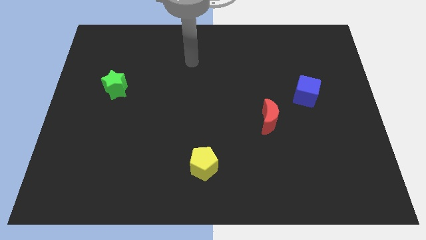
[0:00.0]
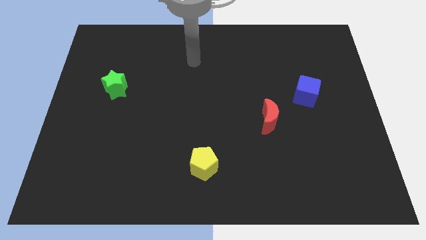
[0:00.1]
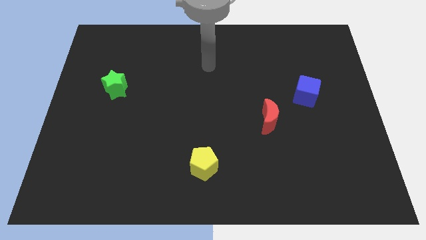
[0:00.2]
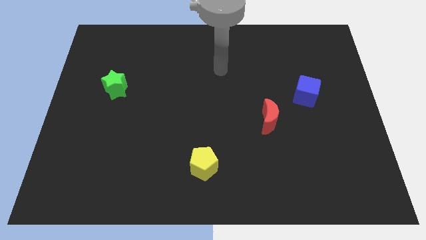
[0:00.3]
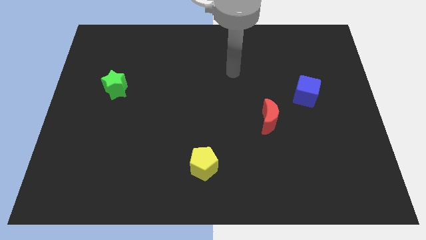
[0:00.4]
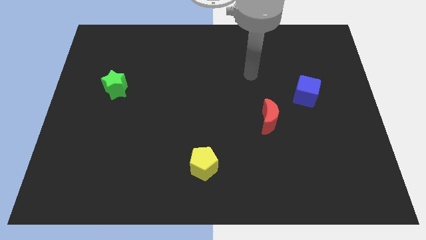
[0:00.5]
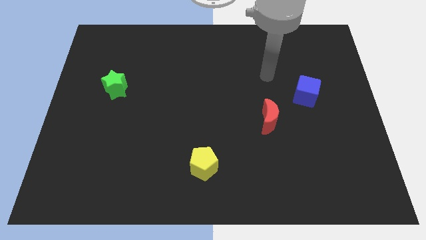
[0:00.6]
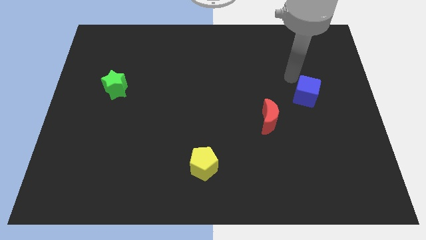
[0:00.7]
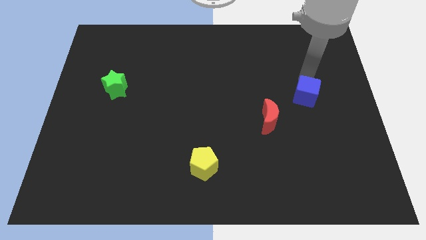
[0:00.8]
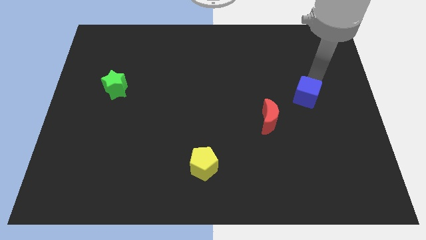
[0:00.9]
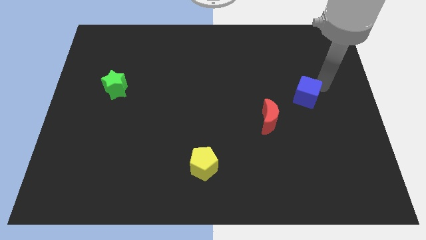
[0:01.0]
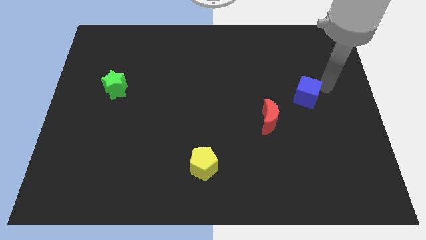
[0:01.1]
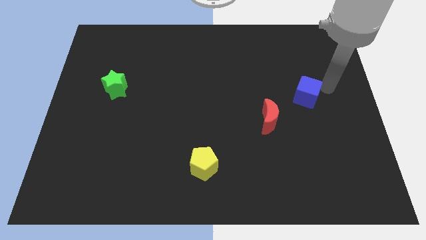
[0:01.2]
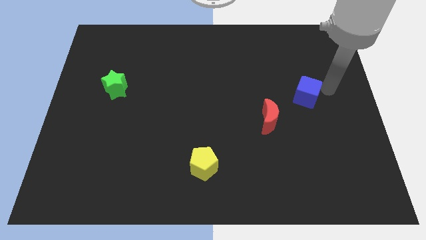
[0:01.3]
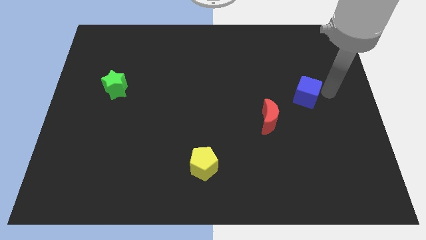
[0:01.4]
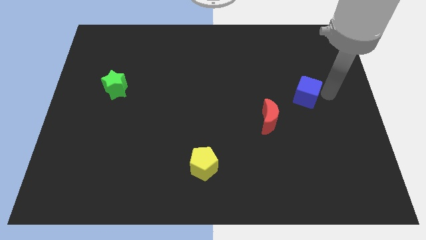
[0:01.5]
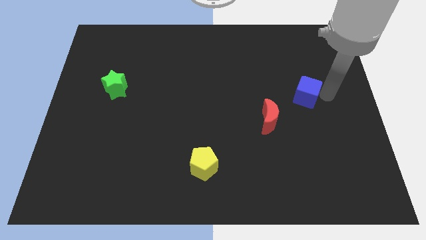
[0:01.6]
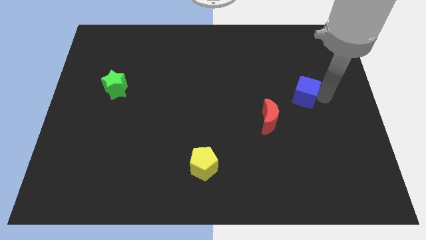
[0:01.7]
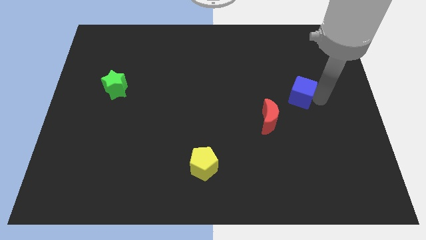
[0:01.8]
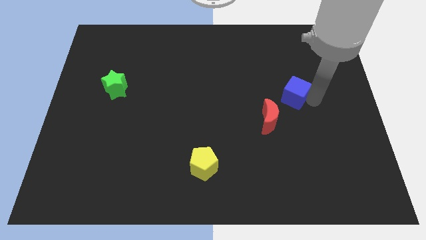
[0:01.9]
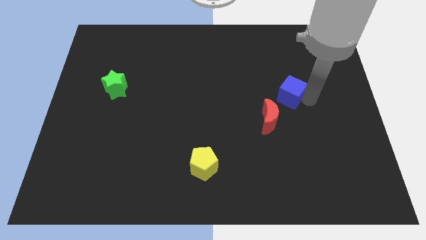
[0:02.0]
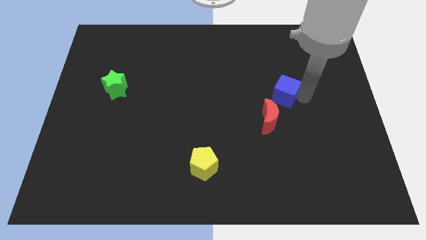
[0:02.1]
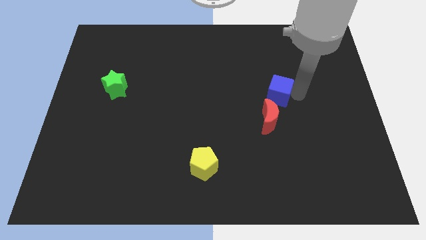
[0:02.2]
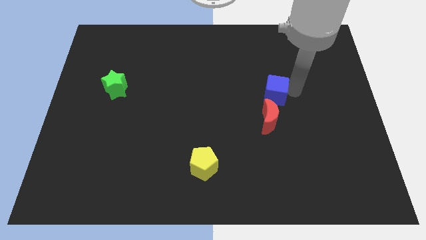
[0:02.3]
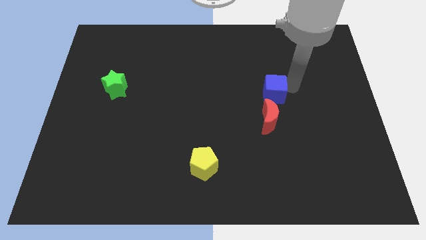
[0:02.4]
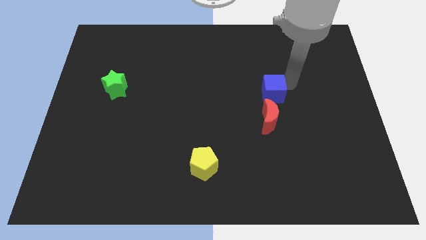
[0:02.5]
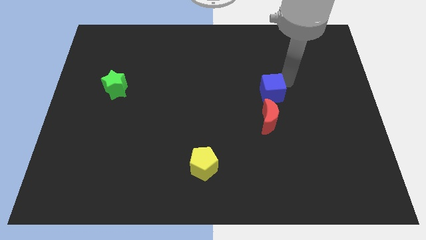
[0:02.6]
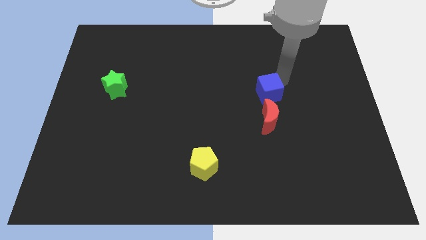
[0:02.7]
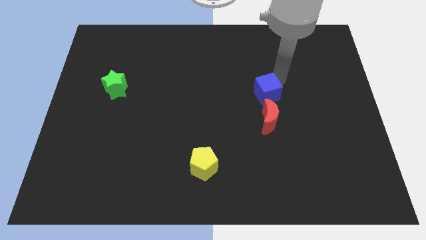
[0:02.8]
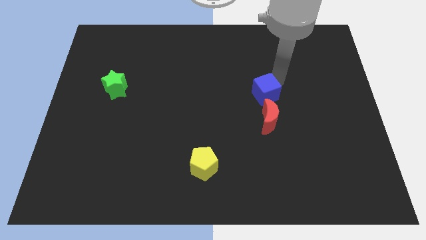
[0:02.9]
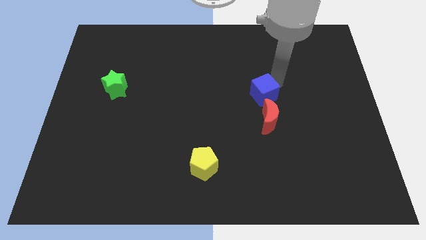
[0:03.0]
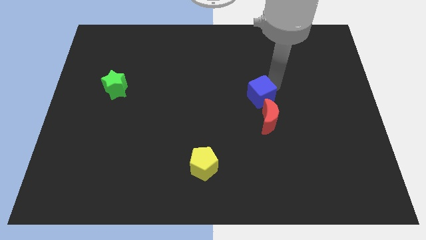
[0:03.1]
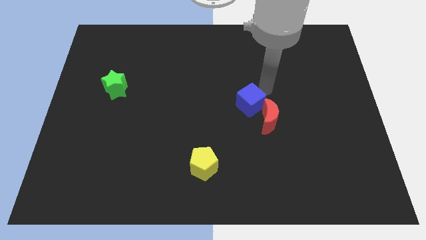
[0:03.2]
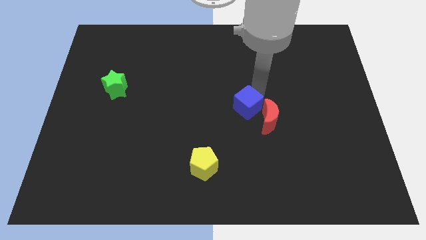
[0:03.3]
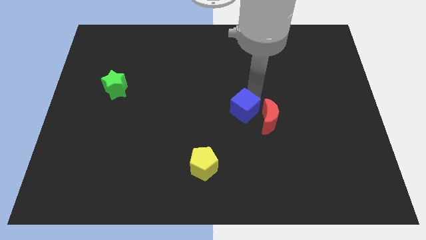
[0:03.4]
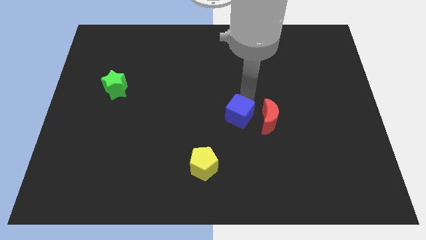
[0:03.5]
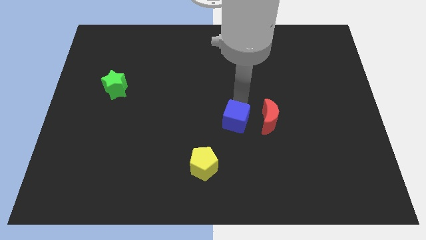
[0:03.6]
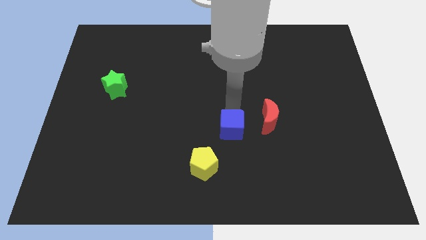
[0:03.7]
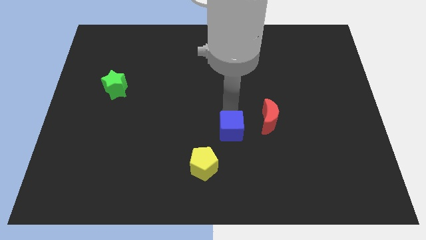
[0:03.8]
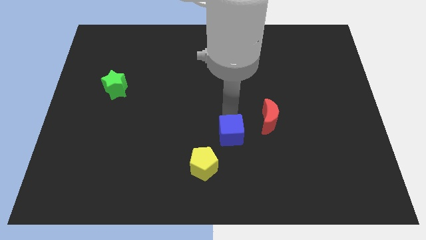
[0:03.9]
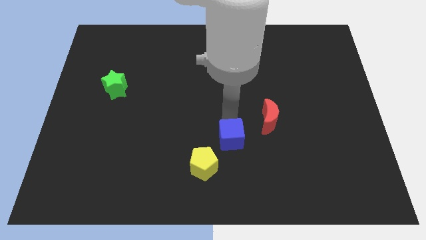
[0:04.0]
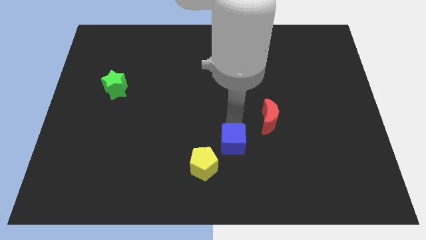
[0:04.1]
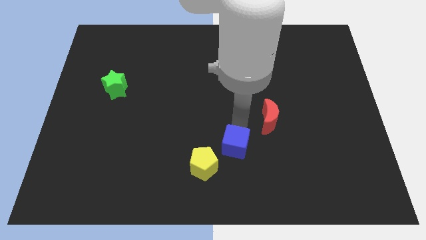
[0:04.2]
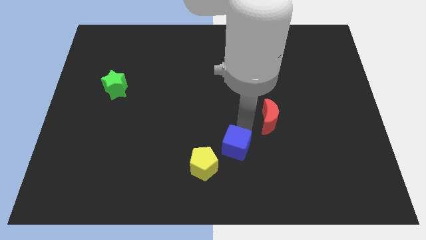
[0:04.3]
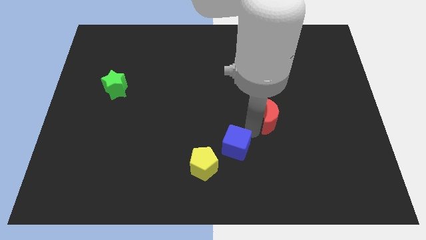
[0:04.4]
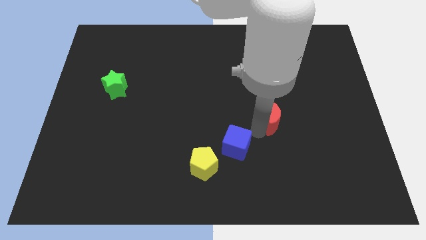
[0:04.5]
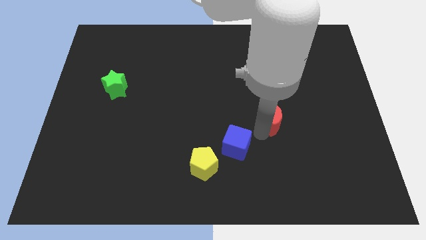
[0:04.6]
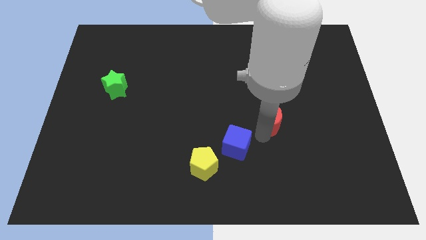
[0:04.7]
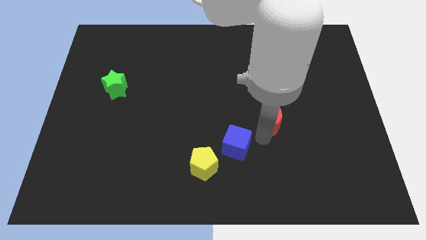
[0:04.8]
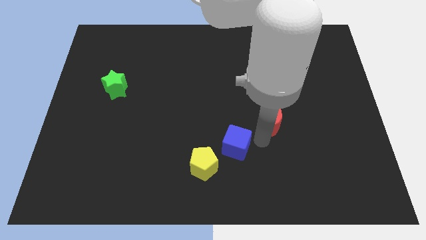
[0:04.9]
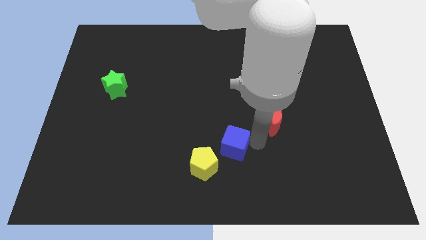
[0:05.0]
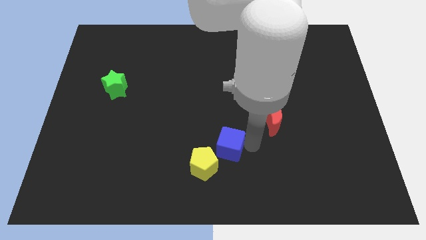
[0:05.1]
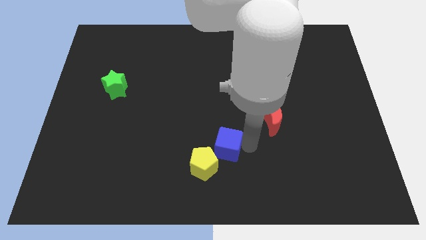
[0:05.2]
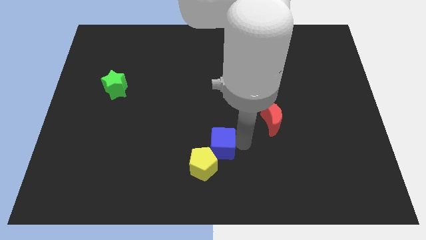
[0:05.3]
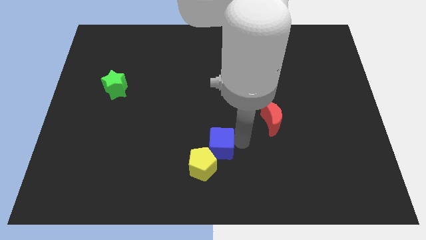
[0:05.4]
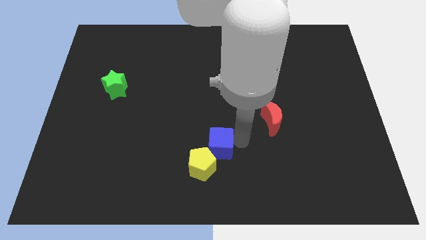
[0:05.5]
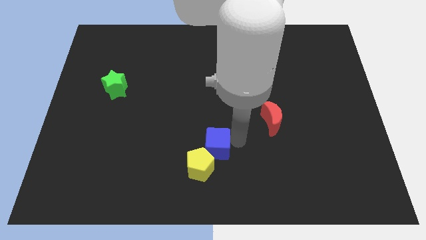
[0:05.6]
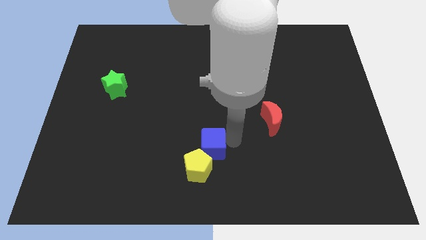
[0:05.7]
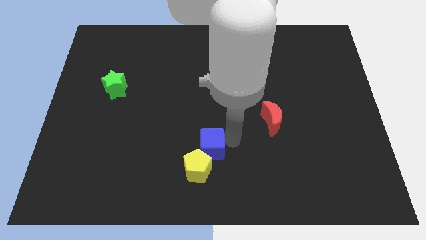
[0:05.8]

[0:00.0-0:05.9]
push the blue cube close to the pentagon

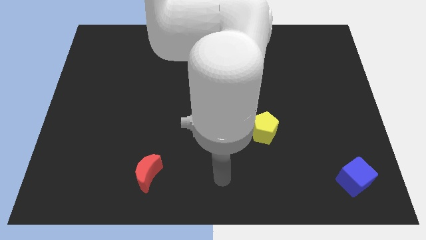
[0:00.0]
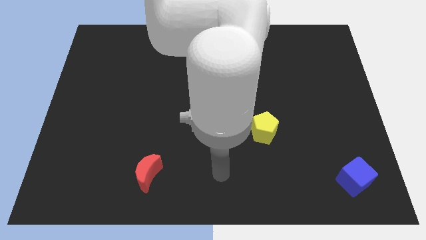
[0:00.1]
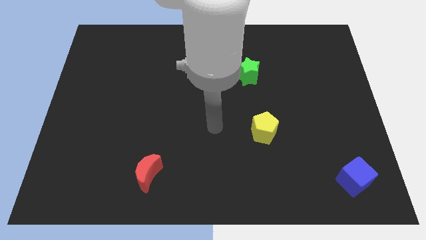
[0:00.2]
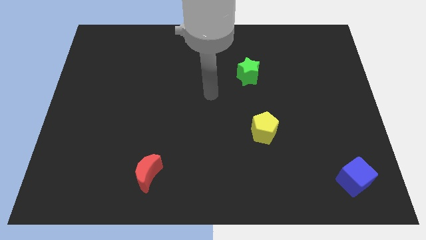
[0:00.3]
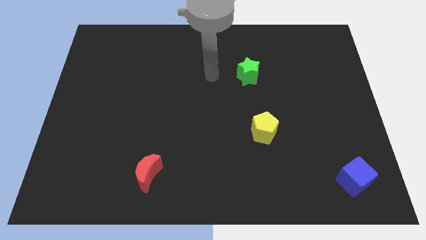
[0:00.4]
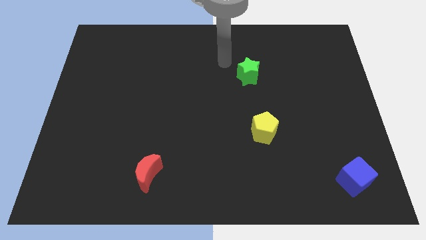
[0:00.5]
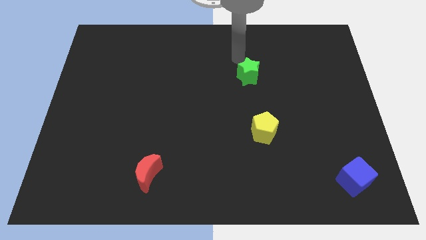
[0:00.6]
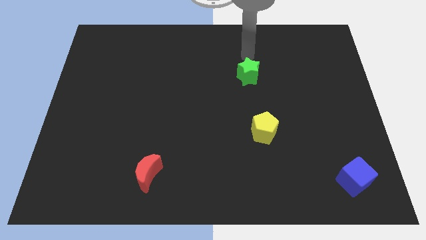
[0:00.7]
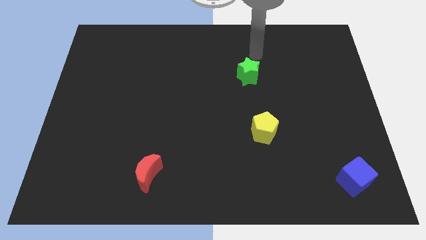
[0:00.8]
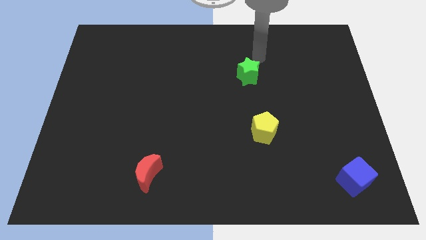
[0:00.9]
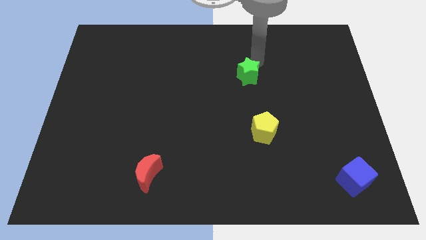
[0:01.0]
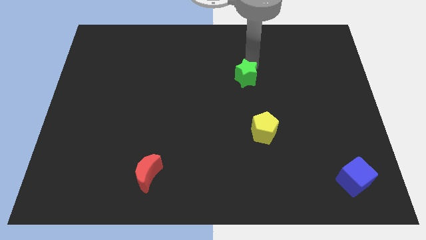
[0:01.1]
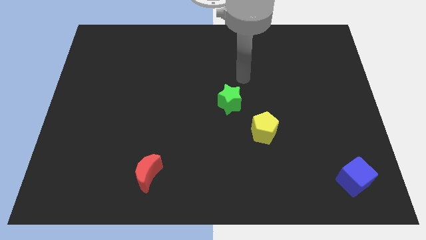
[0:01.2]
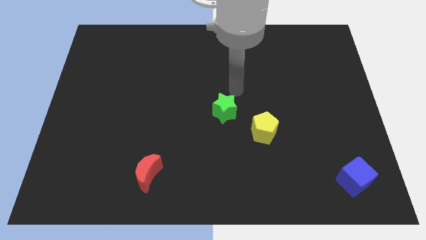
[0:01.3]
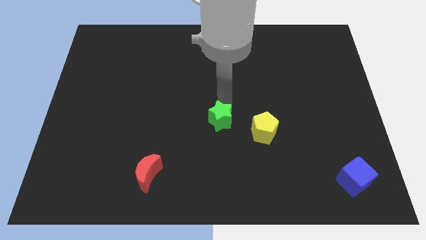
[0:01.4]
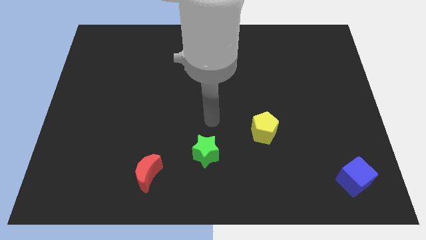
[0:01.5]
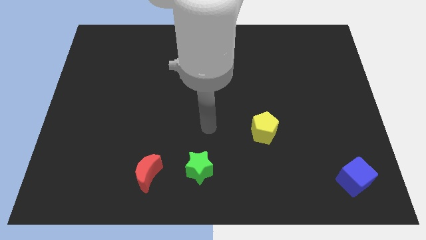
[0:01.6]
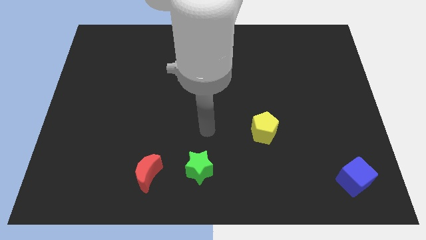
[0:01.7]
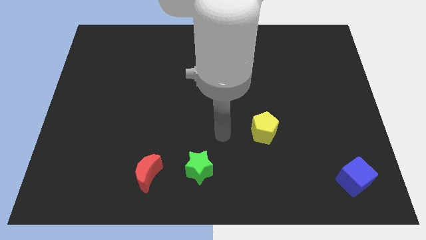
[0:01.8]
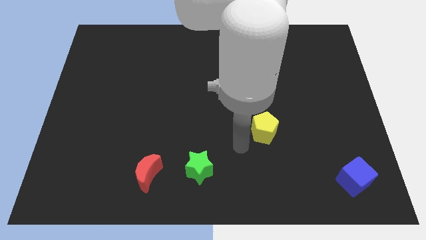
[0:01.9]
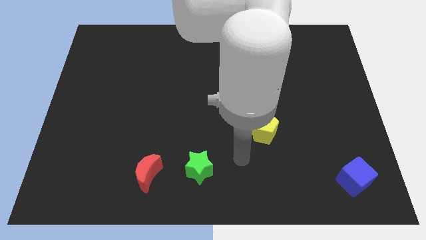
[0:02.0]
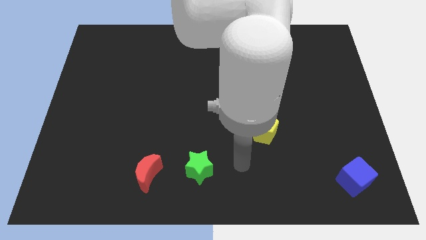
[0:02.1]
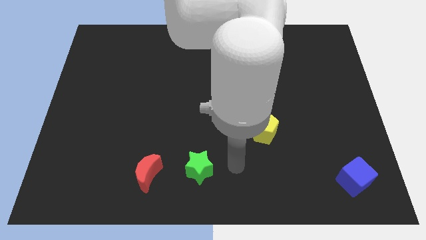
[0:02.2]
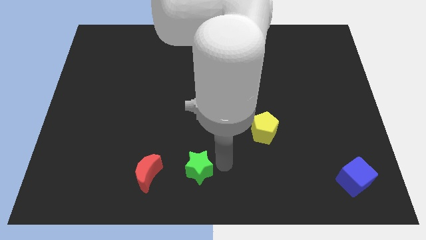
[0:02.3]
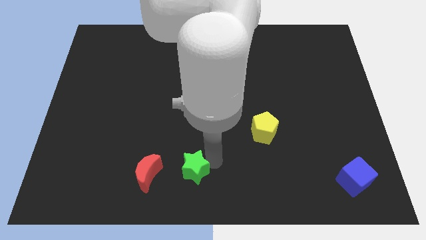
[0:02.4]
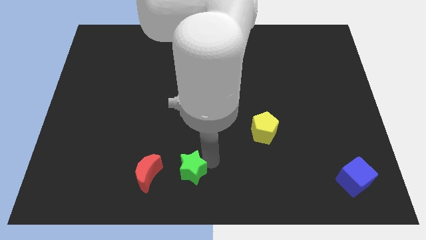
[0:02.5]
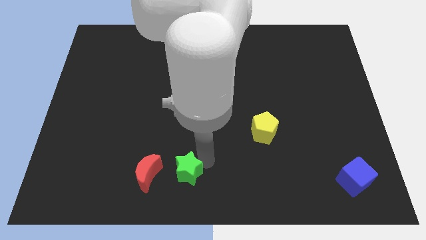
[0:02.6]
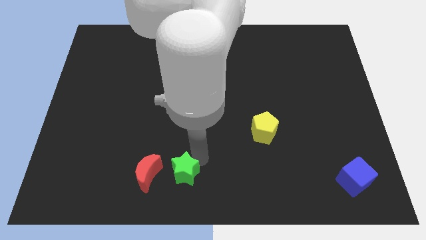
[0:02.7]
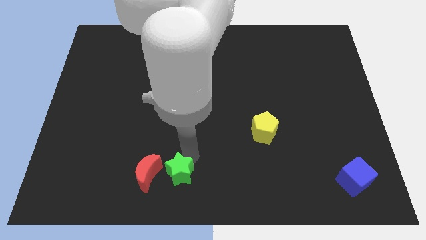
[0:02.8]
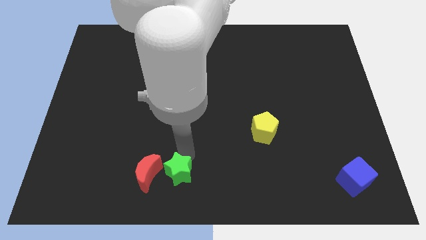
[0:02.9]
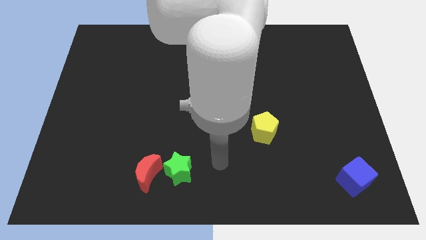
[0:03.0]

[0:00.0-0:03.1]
put the star to the moon
